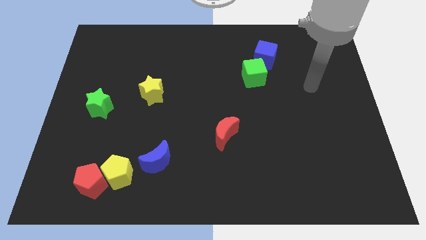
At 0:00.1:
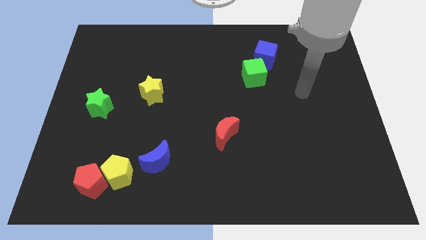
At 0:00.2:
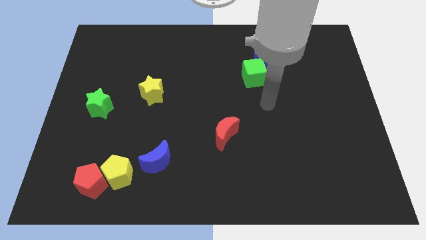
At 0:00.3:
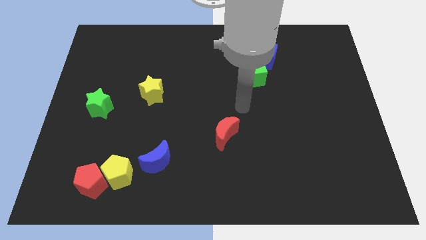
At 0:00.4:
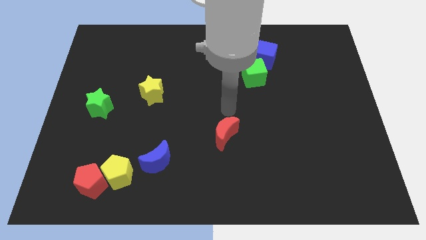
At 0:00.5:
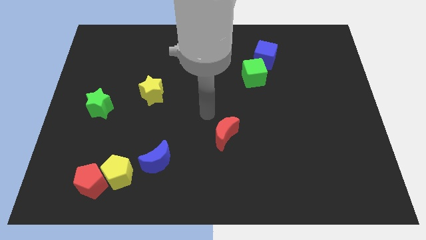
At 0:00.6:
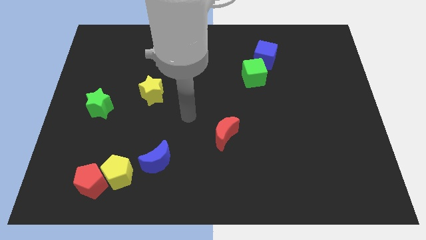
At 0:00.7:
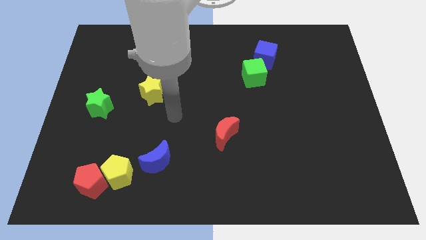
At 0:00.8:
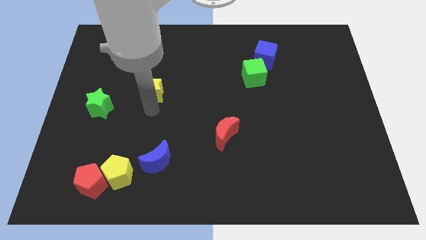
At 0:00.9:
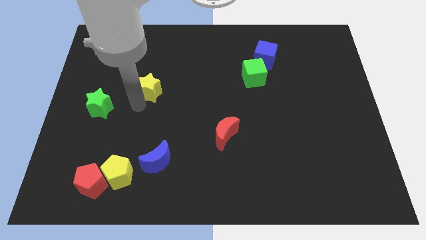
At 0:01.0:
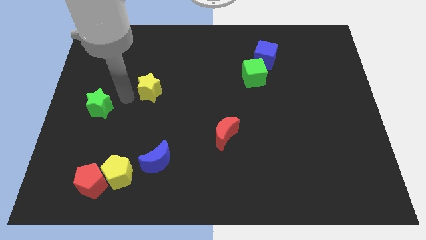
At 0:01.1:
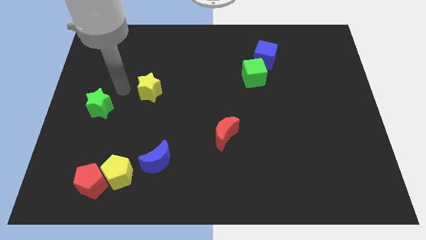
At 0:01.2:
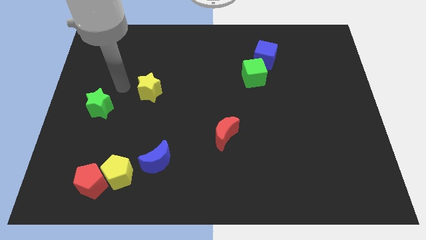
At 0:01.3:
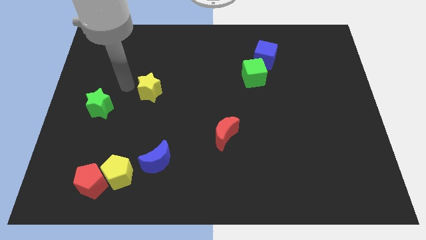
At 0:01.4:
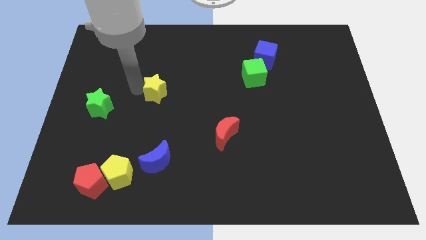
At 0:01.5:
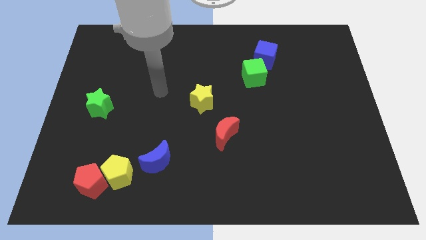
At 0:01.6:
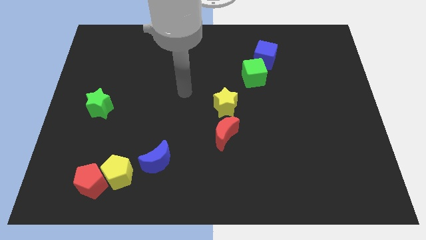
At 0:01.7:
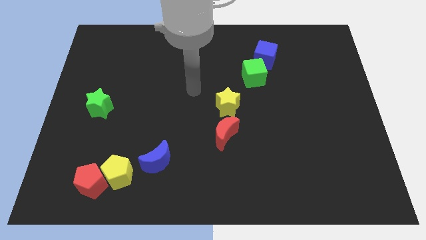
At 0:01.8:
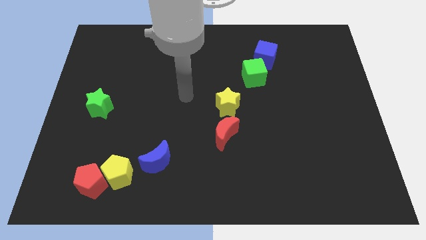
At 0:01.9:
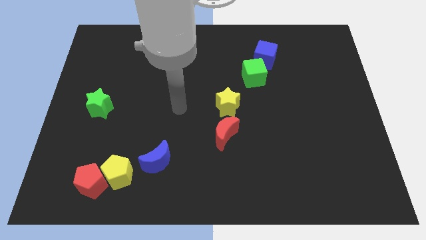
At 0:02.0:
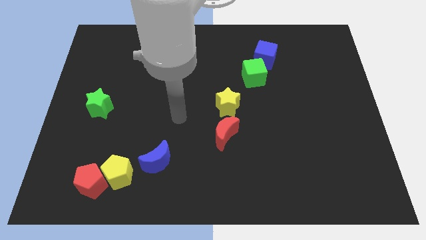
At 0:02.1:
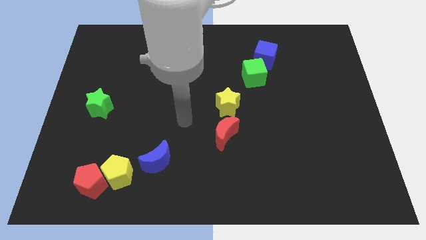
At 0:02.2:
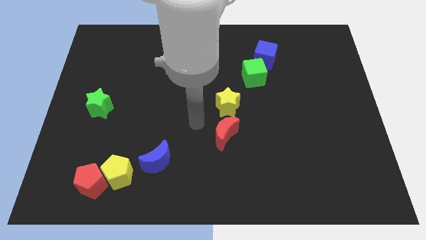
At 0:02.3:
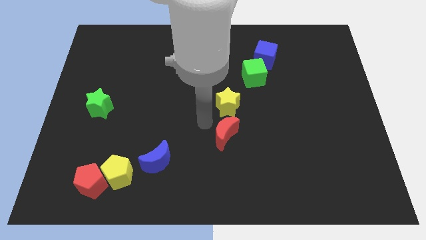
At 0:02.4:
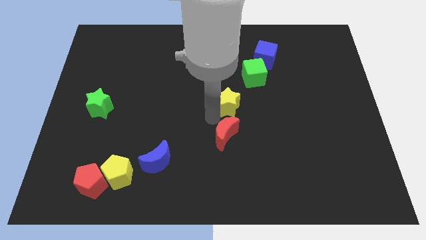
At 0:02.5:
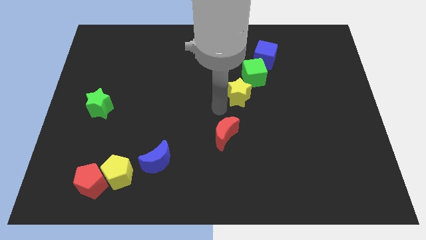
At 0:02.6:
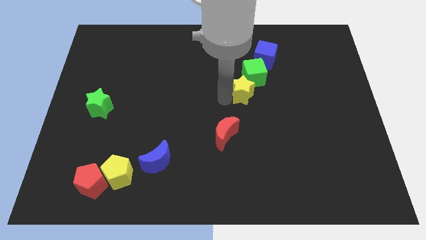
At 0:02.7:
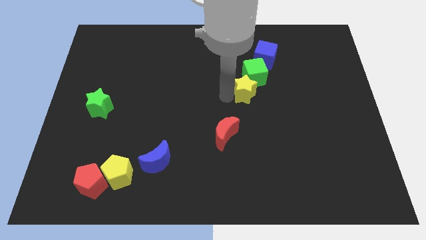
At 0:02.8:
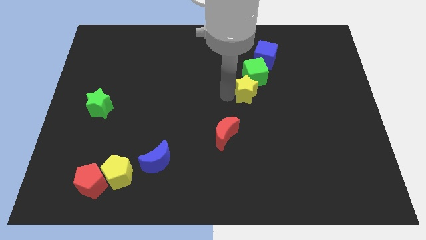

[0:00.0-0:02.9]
slide the yellow star next to the green cube

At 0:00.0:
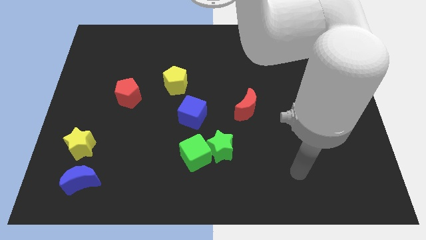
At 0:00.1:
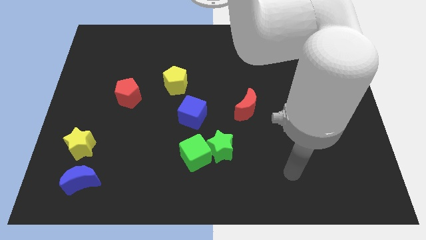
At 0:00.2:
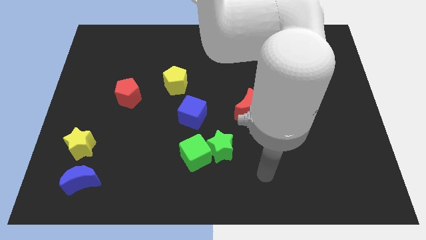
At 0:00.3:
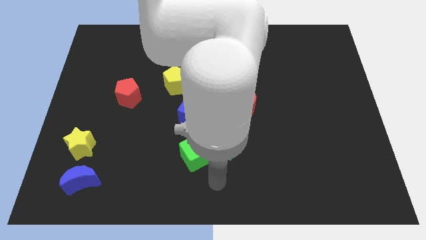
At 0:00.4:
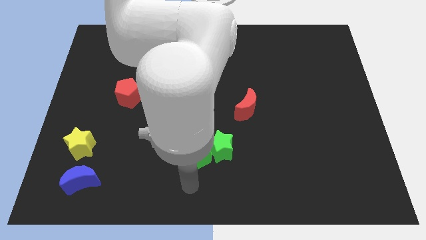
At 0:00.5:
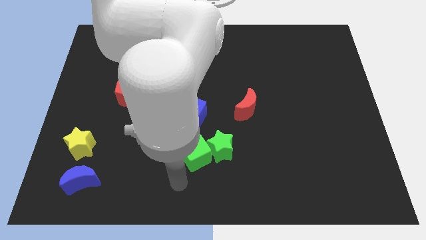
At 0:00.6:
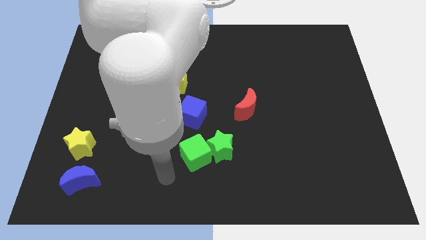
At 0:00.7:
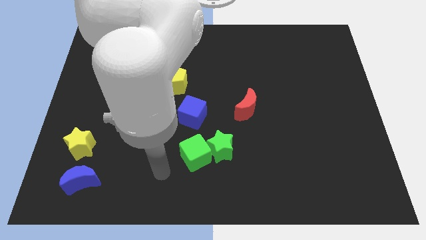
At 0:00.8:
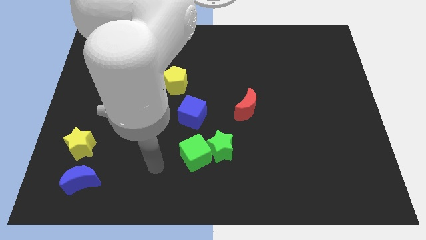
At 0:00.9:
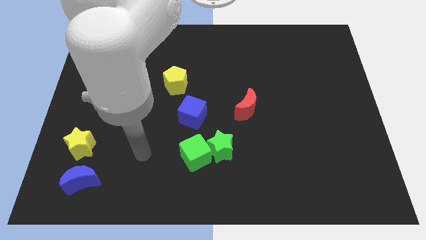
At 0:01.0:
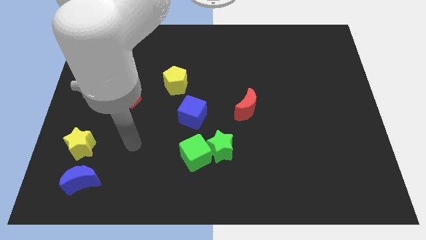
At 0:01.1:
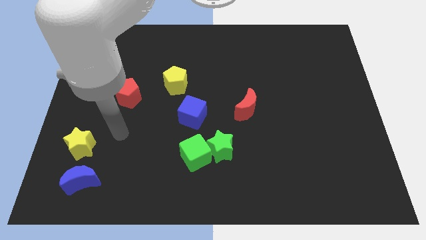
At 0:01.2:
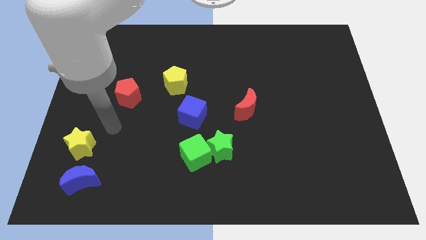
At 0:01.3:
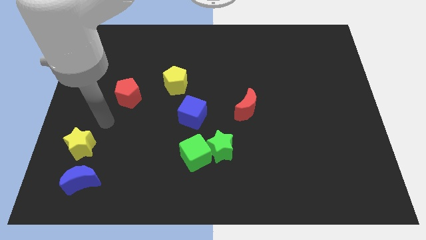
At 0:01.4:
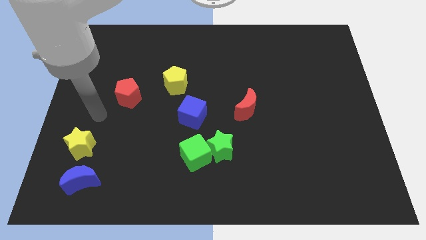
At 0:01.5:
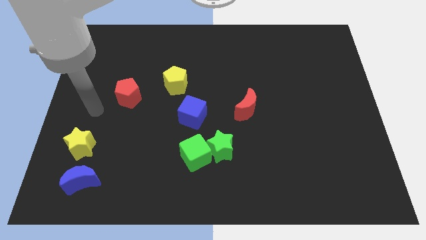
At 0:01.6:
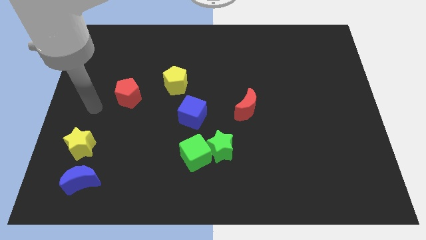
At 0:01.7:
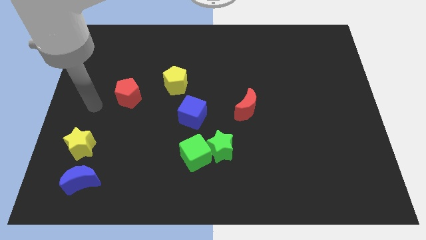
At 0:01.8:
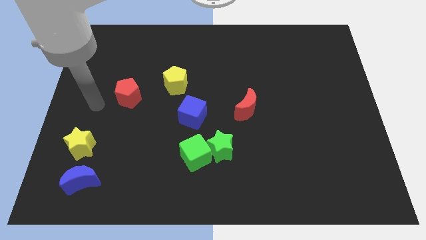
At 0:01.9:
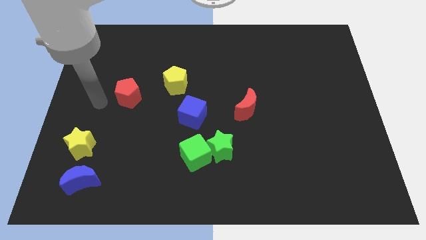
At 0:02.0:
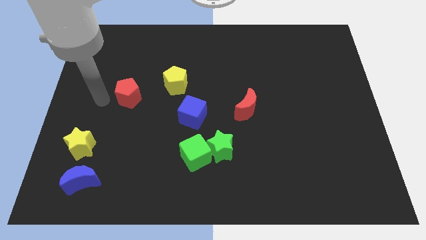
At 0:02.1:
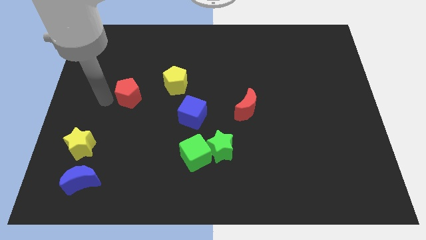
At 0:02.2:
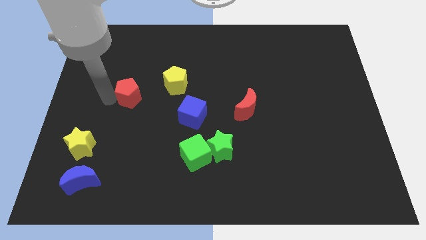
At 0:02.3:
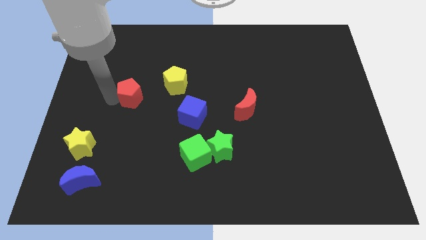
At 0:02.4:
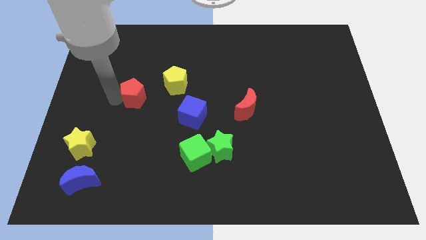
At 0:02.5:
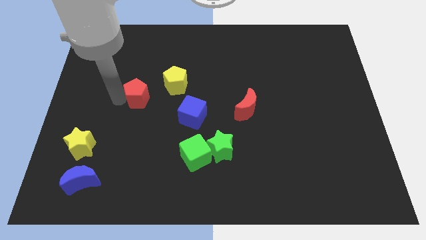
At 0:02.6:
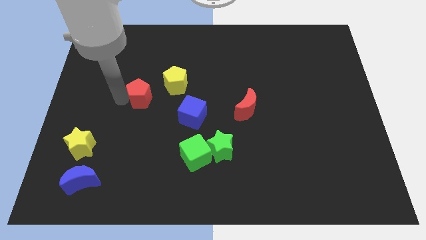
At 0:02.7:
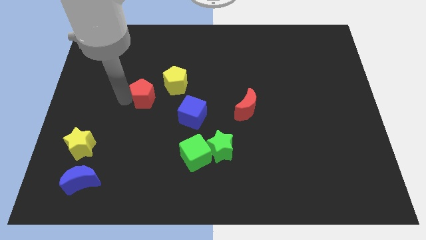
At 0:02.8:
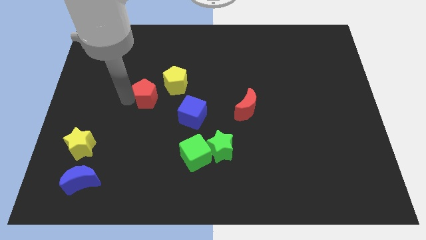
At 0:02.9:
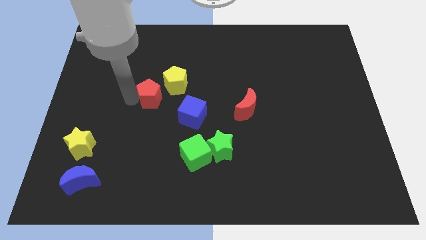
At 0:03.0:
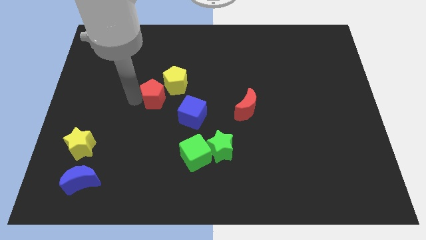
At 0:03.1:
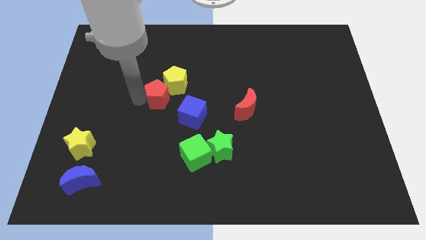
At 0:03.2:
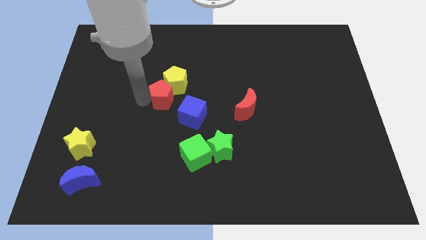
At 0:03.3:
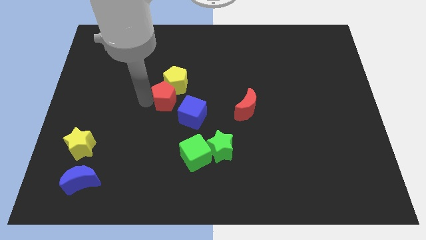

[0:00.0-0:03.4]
put the red pentagon towards the yellow pentagon

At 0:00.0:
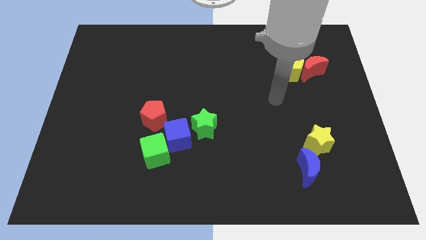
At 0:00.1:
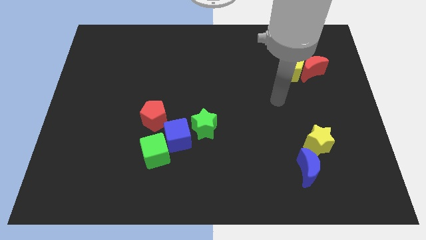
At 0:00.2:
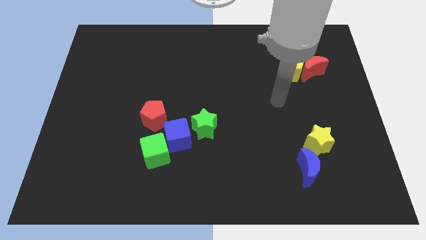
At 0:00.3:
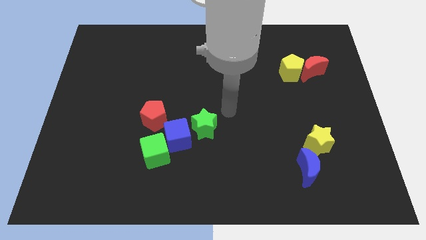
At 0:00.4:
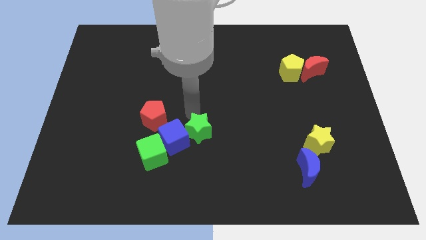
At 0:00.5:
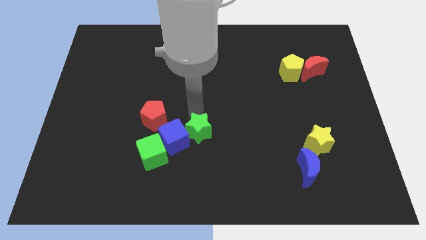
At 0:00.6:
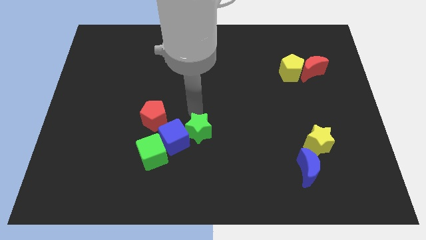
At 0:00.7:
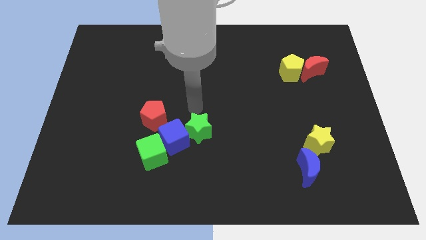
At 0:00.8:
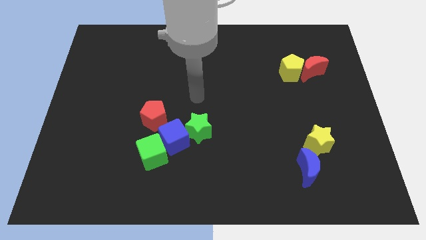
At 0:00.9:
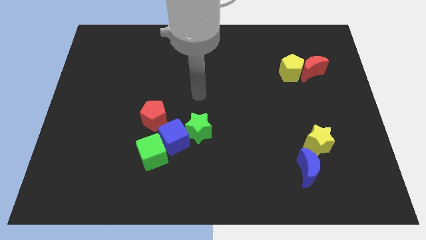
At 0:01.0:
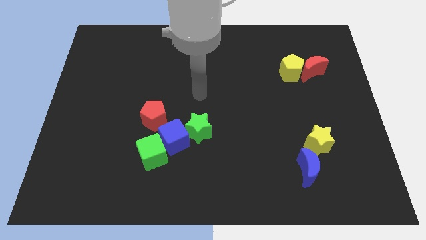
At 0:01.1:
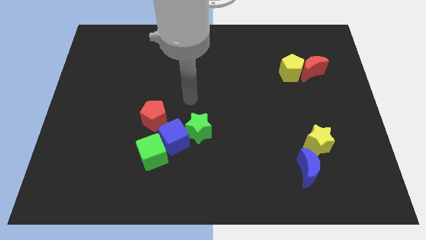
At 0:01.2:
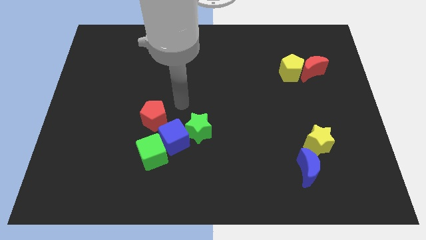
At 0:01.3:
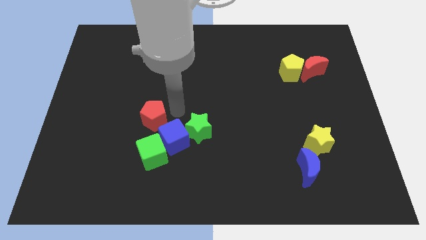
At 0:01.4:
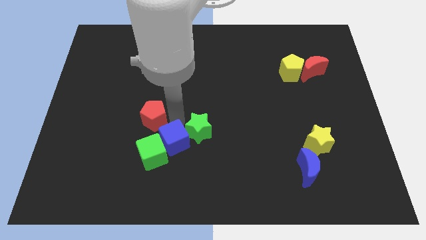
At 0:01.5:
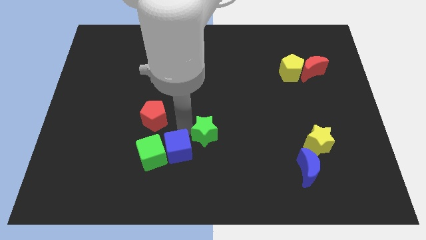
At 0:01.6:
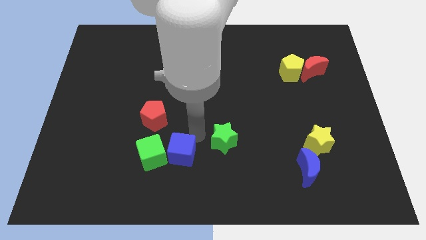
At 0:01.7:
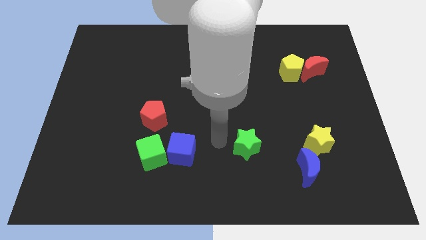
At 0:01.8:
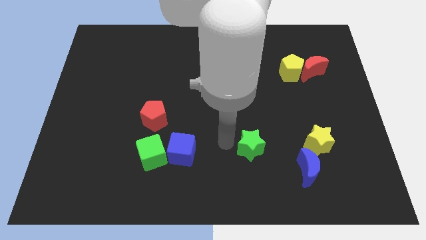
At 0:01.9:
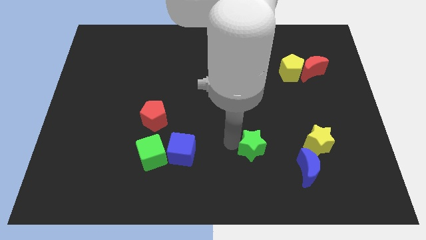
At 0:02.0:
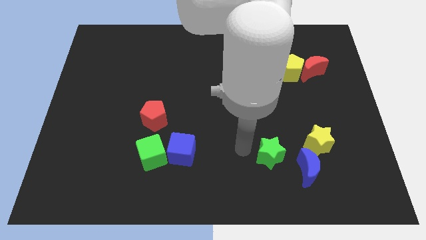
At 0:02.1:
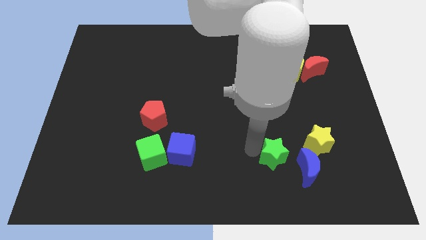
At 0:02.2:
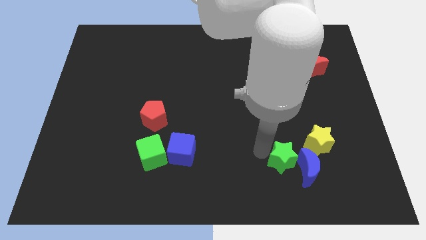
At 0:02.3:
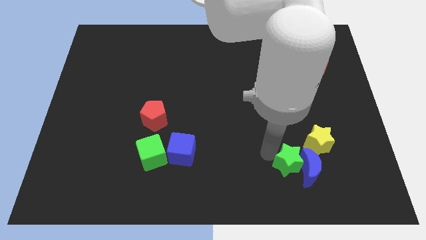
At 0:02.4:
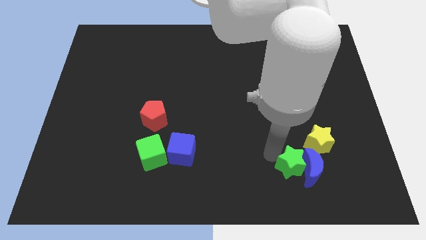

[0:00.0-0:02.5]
put the green star to the blue moon
